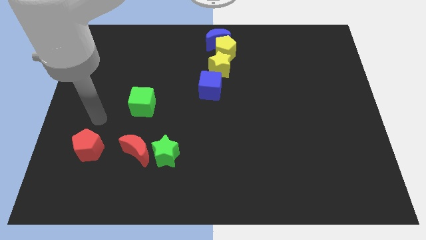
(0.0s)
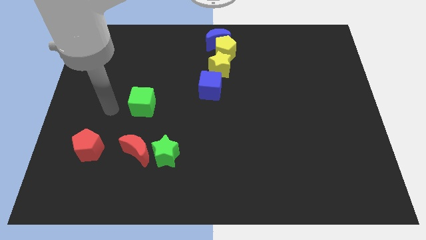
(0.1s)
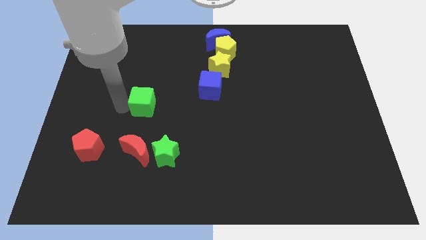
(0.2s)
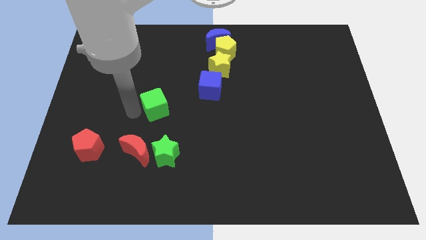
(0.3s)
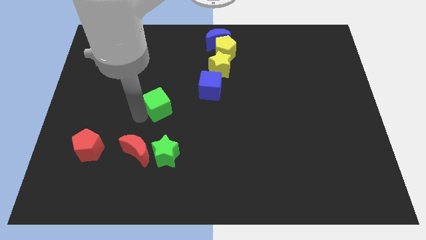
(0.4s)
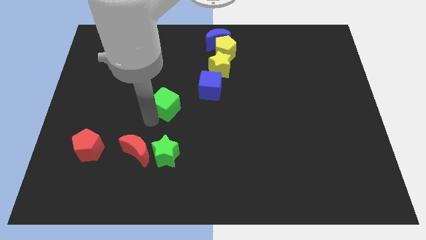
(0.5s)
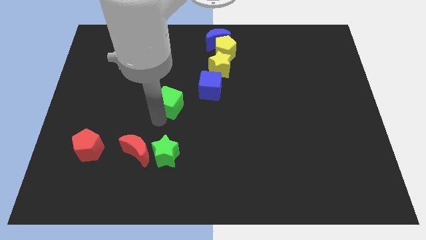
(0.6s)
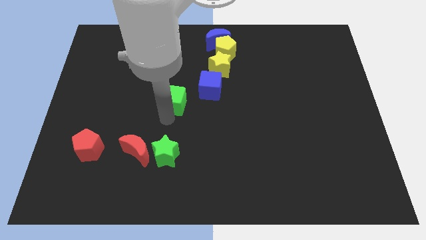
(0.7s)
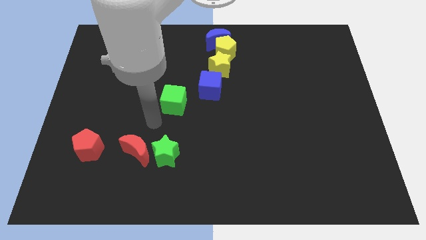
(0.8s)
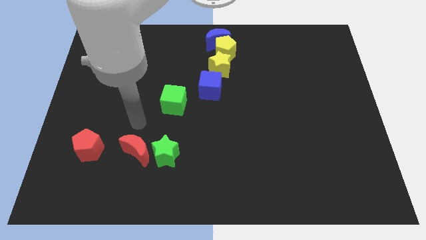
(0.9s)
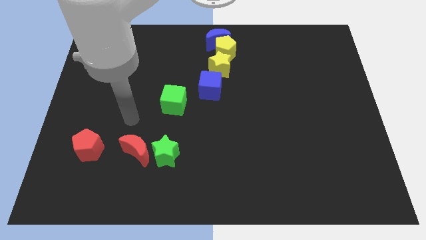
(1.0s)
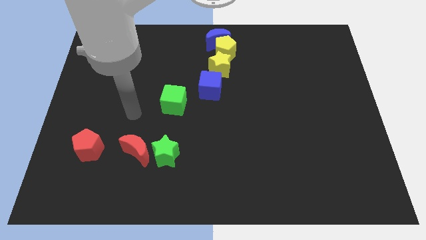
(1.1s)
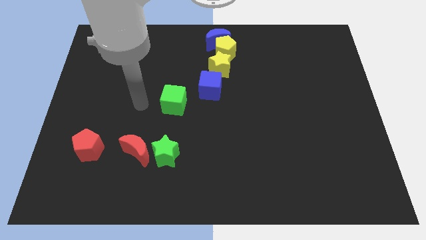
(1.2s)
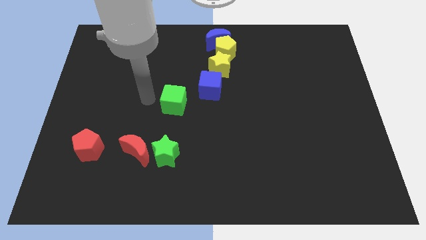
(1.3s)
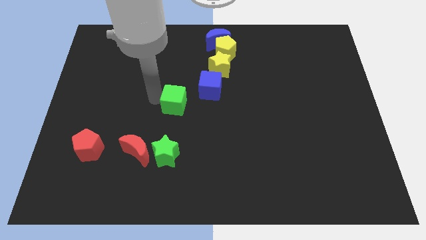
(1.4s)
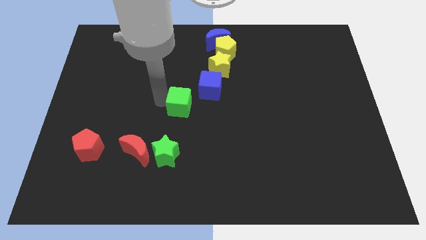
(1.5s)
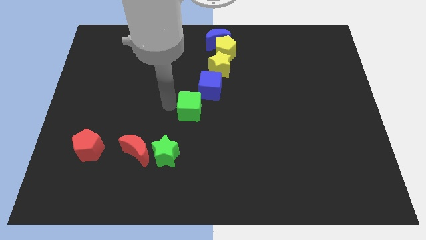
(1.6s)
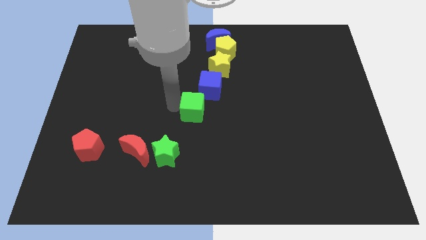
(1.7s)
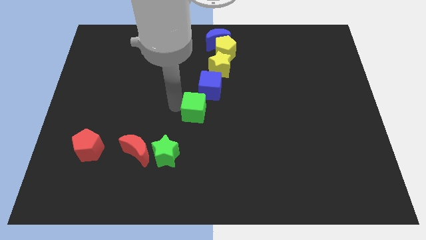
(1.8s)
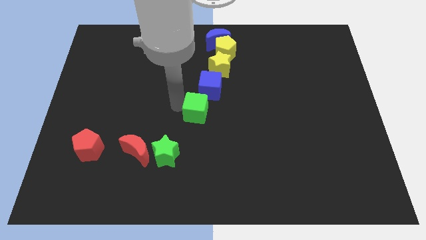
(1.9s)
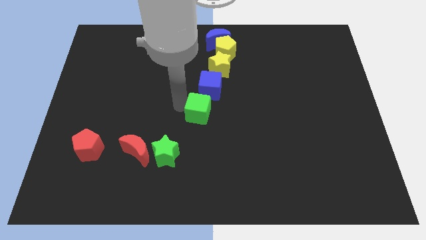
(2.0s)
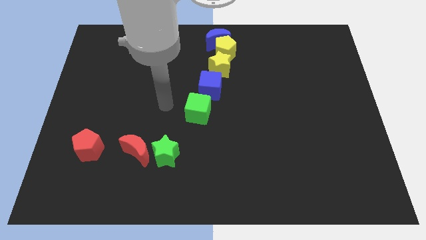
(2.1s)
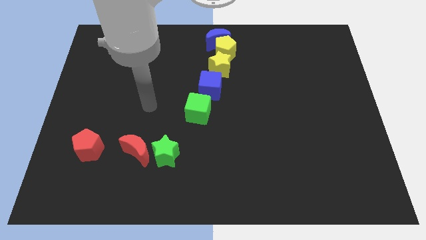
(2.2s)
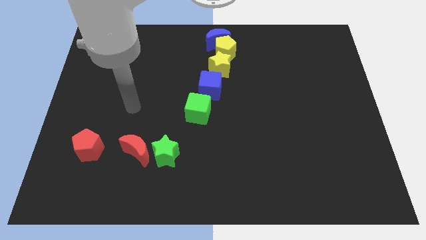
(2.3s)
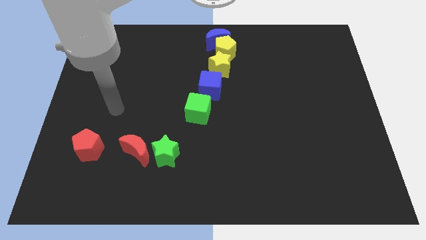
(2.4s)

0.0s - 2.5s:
push the green cube to the bottom side of the blue cube

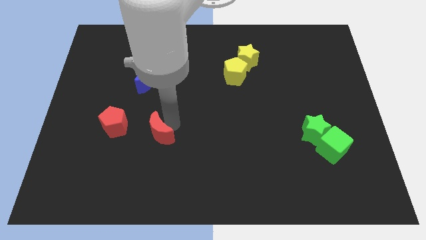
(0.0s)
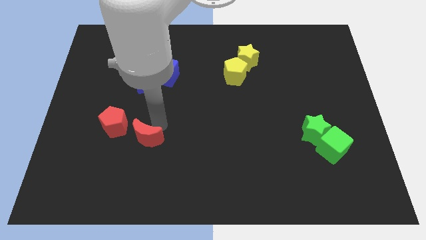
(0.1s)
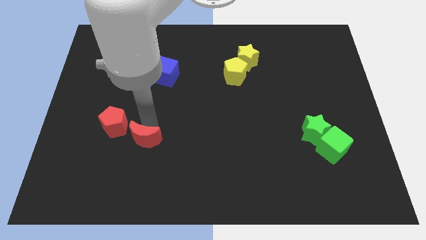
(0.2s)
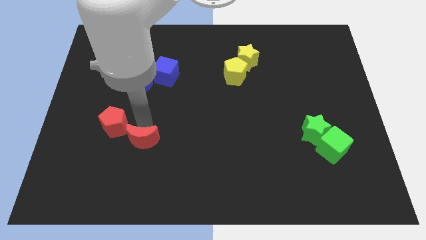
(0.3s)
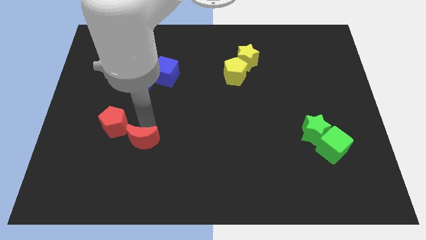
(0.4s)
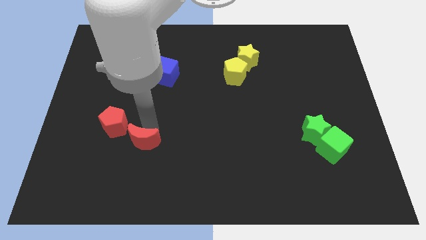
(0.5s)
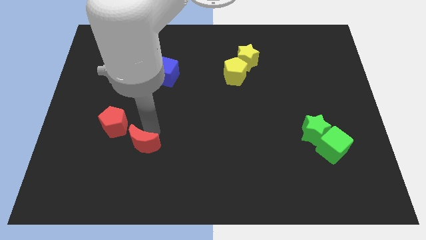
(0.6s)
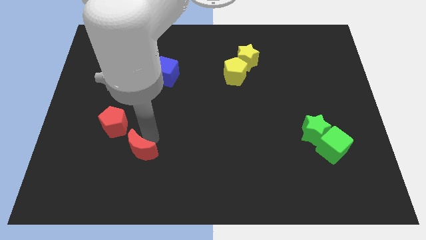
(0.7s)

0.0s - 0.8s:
put the red moon at the bottom right of the red pentagon

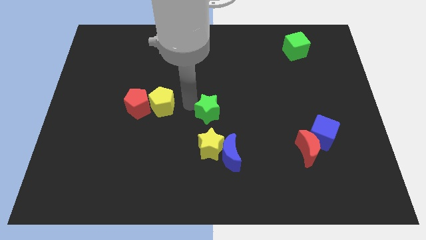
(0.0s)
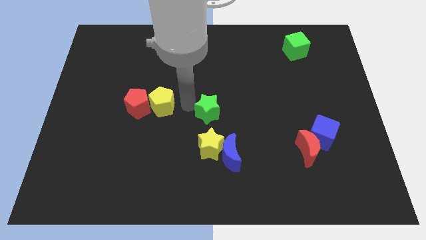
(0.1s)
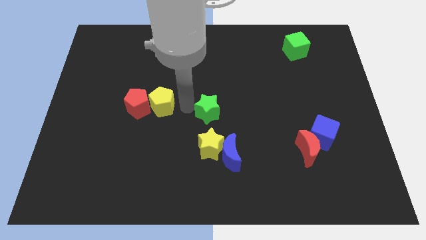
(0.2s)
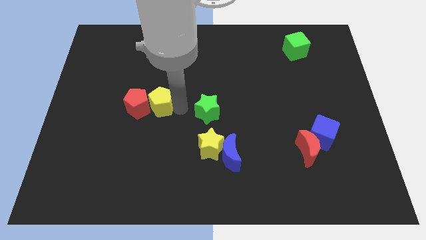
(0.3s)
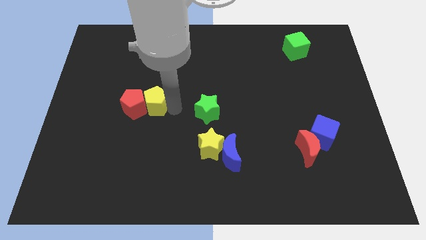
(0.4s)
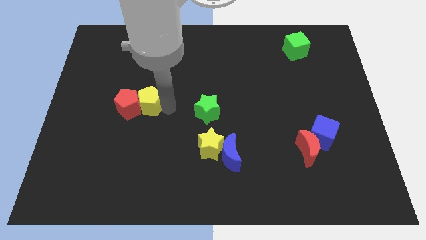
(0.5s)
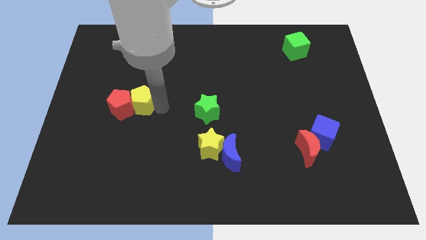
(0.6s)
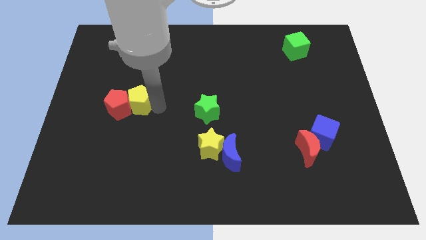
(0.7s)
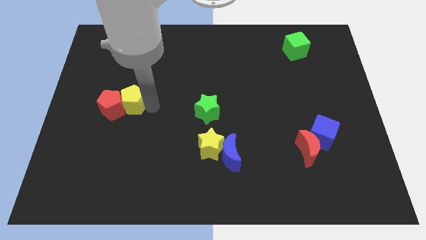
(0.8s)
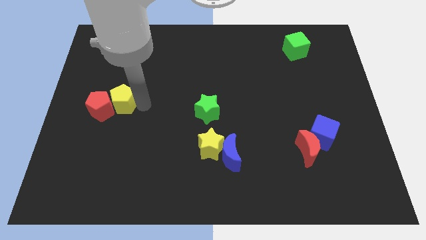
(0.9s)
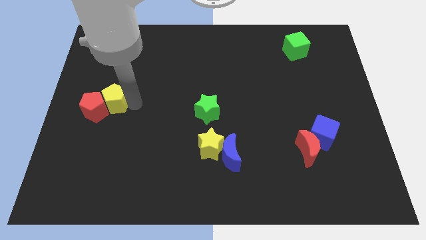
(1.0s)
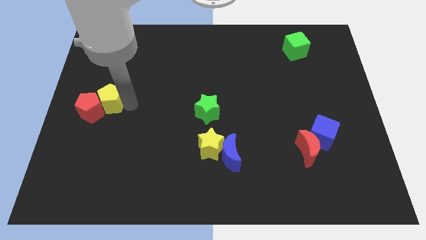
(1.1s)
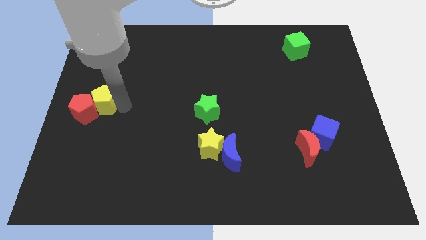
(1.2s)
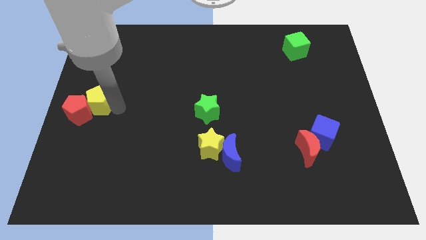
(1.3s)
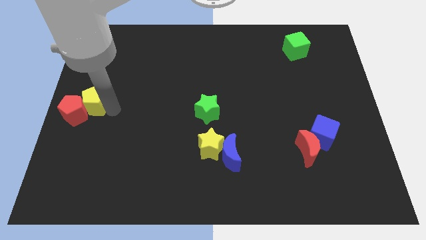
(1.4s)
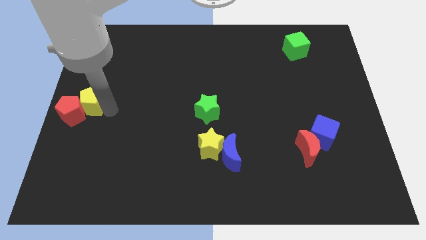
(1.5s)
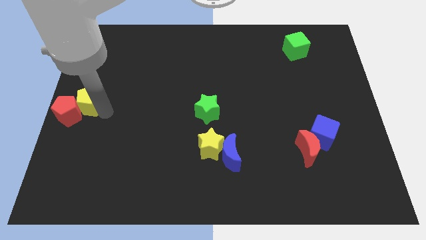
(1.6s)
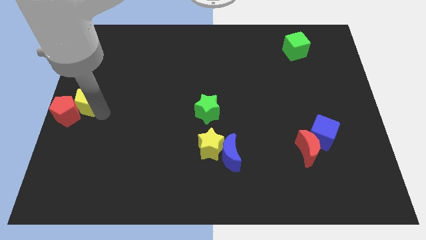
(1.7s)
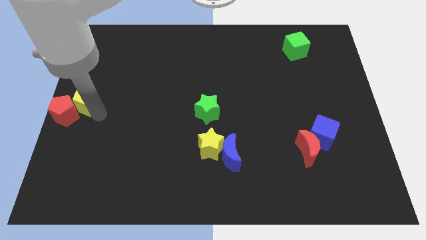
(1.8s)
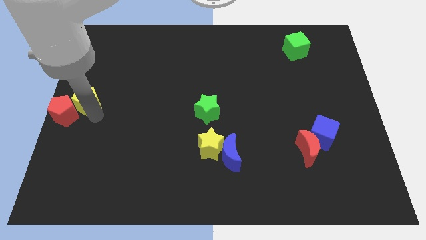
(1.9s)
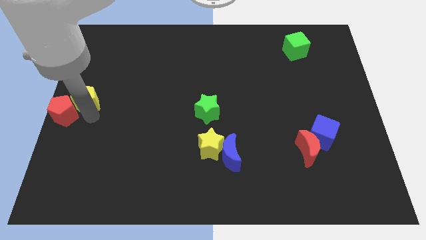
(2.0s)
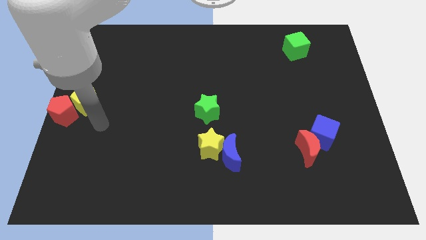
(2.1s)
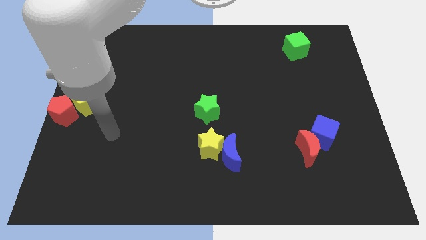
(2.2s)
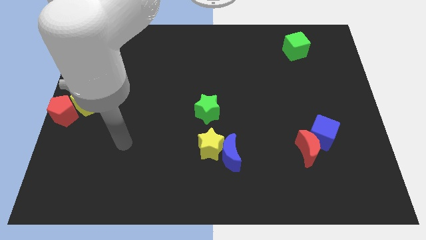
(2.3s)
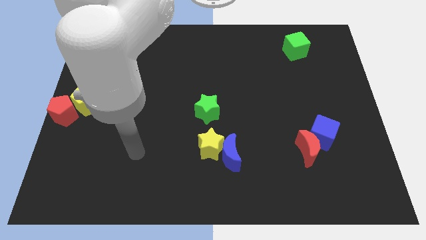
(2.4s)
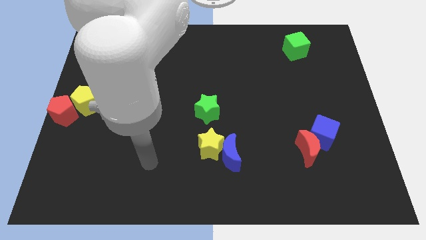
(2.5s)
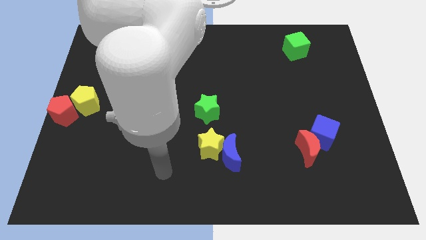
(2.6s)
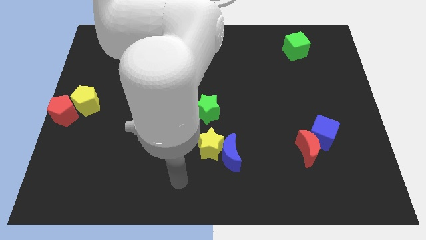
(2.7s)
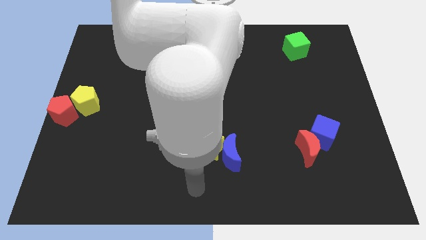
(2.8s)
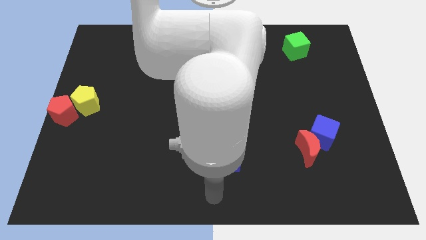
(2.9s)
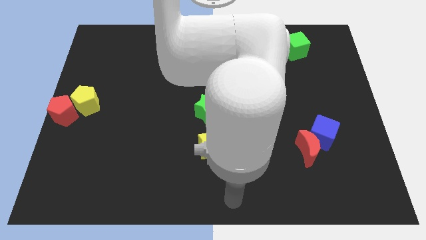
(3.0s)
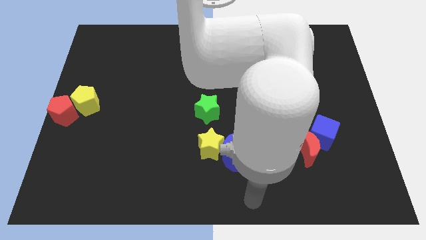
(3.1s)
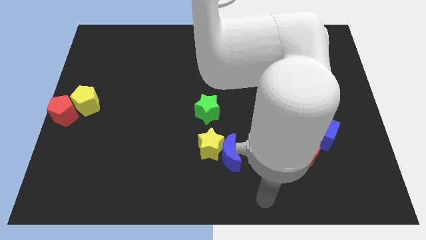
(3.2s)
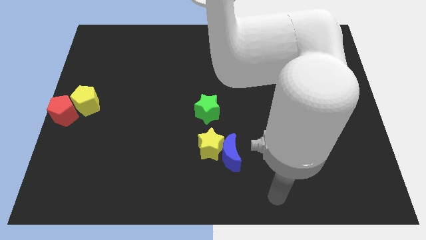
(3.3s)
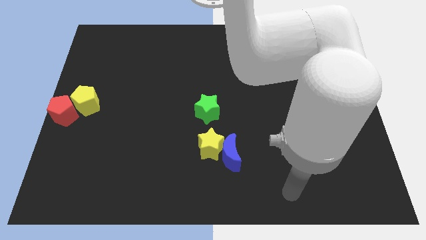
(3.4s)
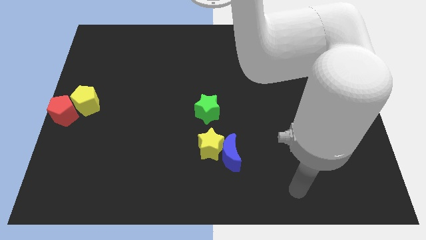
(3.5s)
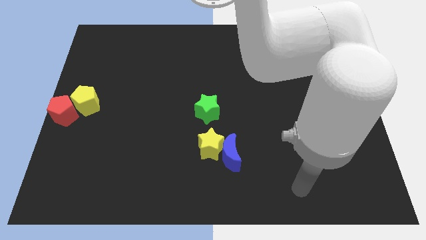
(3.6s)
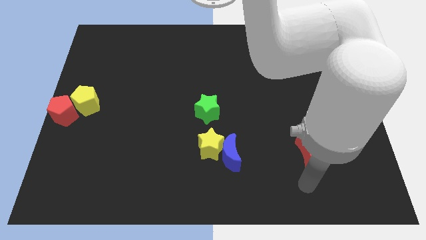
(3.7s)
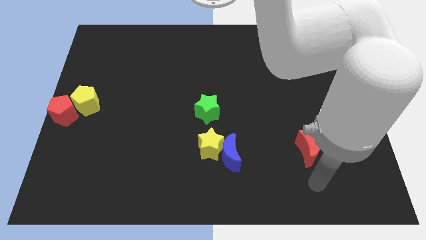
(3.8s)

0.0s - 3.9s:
push the red pentagon and yellow pentagon to the left side of the board

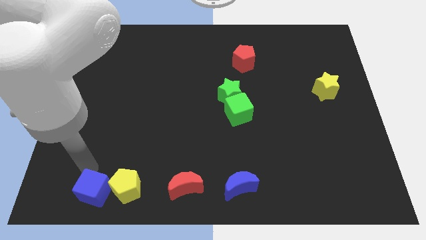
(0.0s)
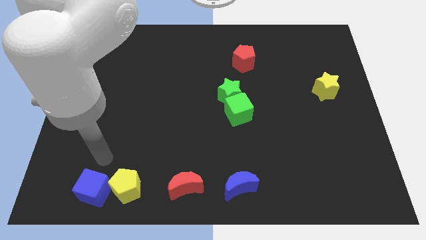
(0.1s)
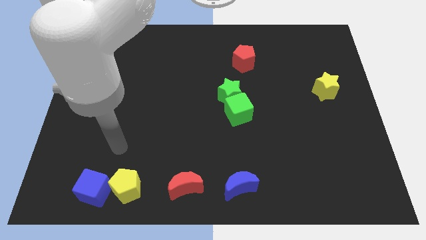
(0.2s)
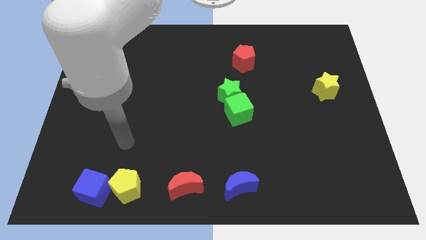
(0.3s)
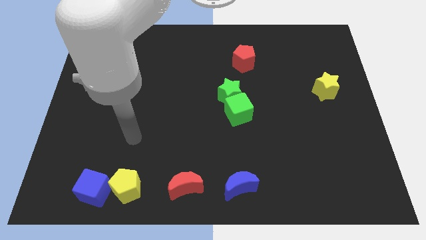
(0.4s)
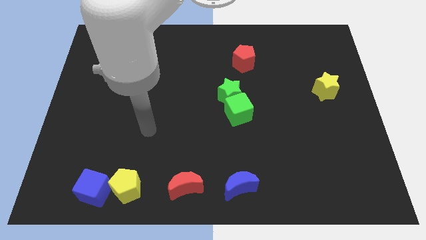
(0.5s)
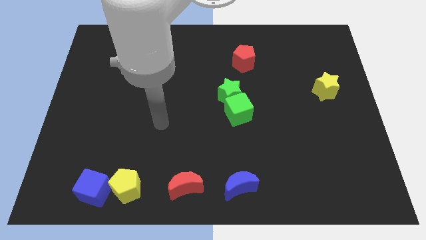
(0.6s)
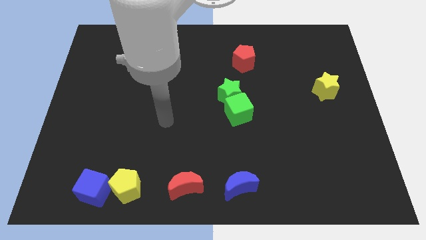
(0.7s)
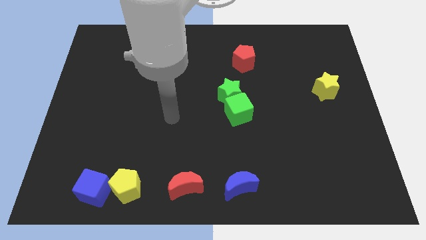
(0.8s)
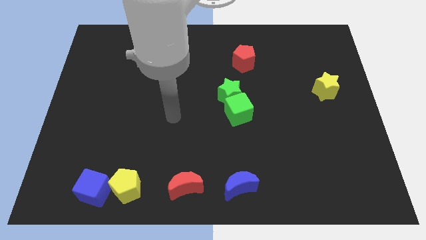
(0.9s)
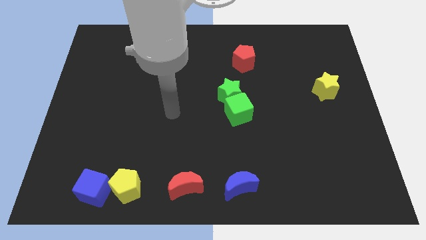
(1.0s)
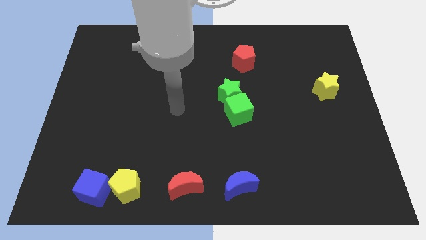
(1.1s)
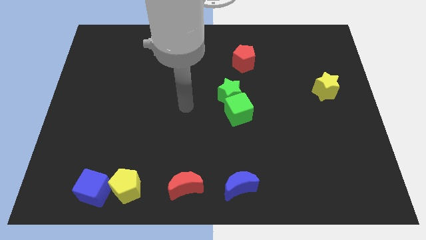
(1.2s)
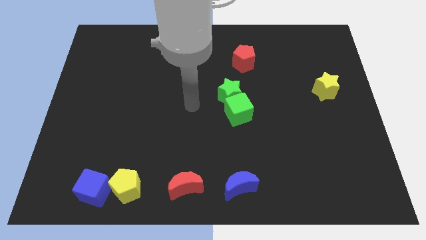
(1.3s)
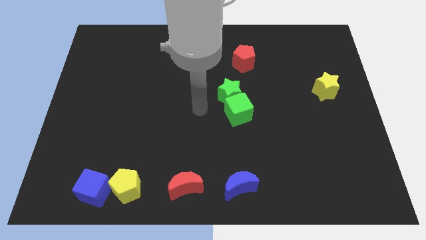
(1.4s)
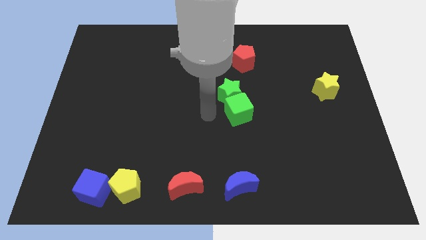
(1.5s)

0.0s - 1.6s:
move your arm away from the blue cube
